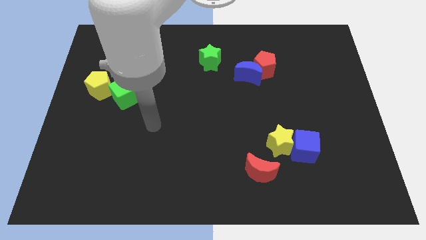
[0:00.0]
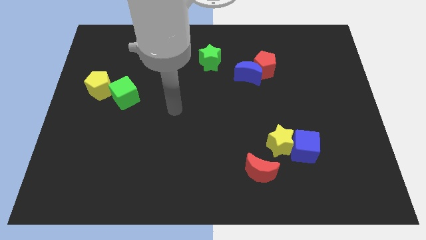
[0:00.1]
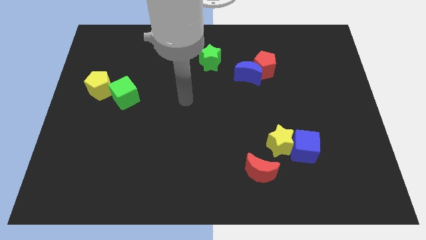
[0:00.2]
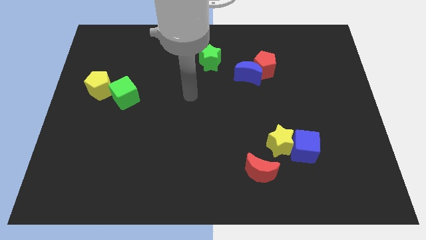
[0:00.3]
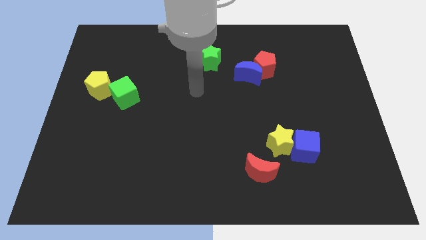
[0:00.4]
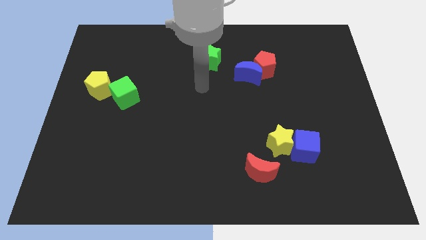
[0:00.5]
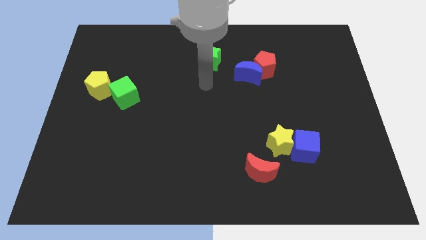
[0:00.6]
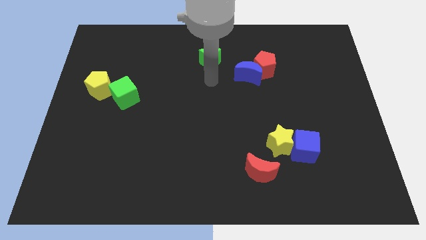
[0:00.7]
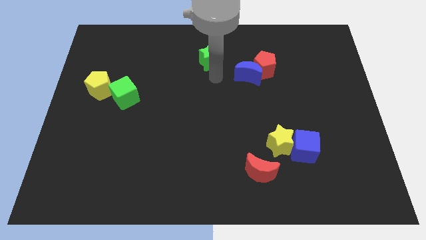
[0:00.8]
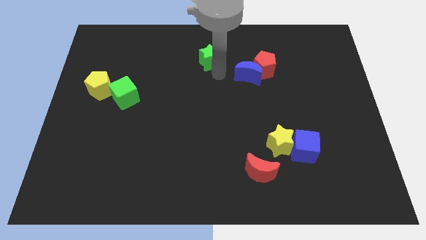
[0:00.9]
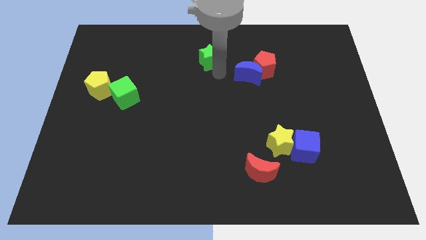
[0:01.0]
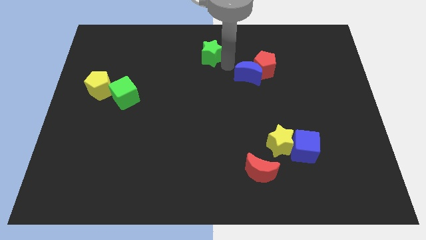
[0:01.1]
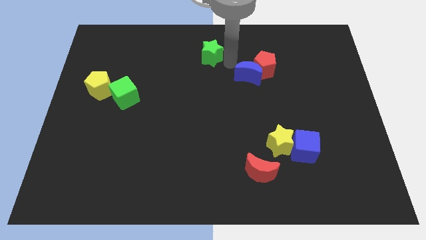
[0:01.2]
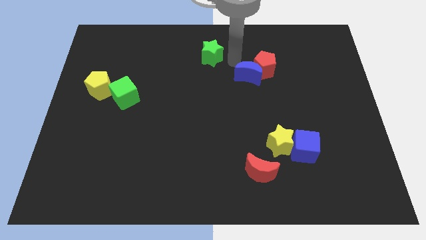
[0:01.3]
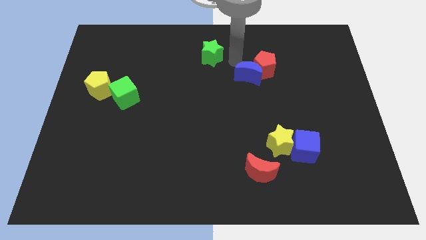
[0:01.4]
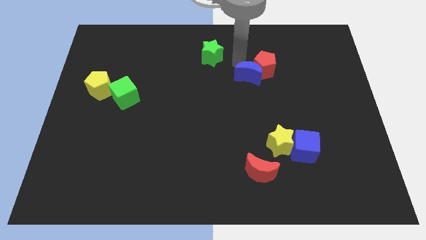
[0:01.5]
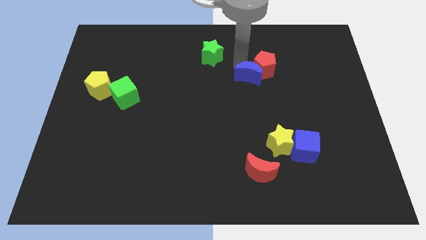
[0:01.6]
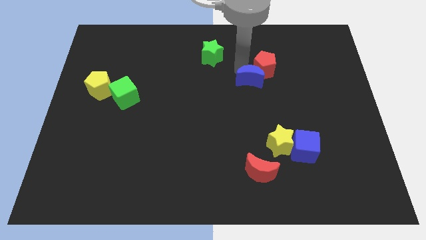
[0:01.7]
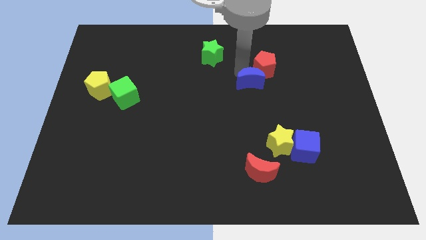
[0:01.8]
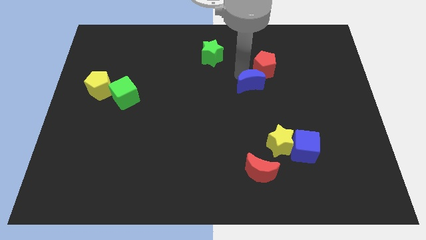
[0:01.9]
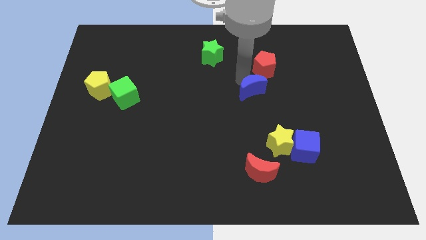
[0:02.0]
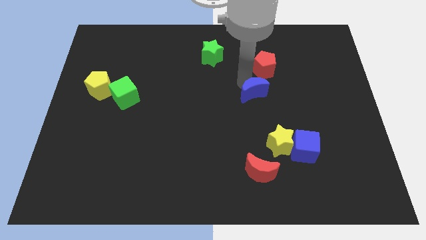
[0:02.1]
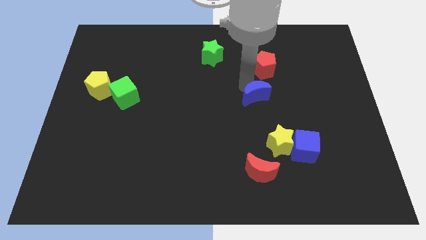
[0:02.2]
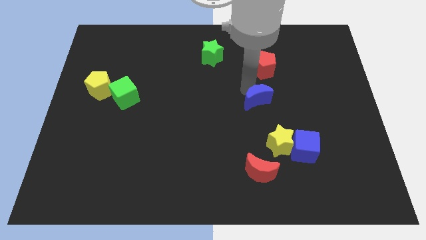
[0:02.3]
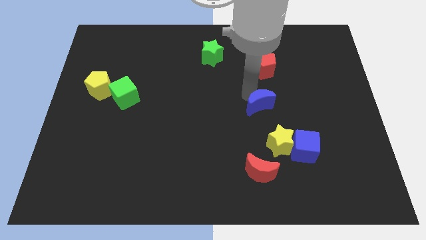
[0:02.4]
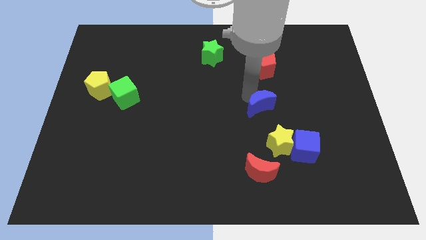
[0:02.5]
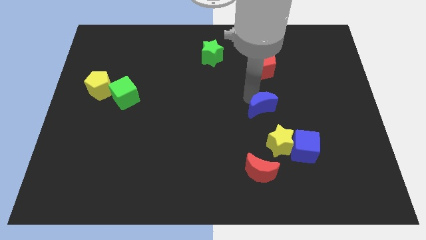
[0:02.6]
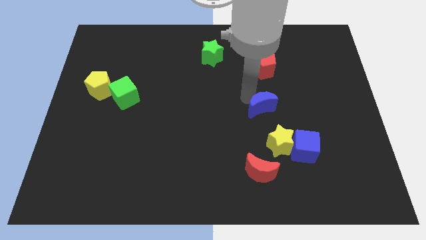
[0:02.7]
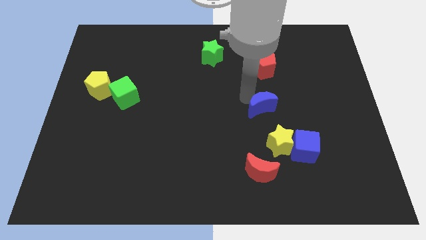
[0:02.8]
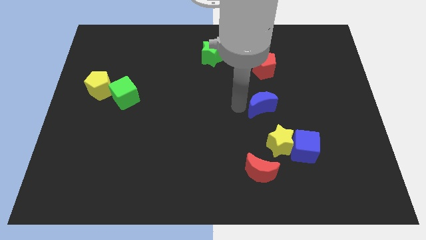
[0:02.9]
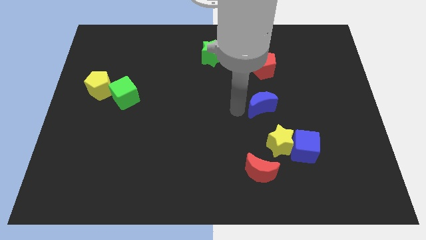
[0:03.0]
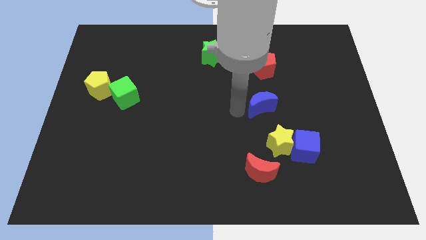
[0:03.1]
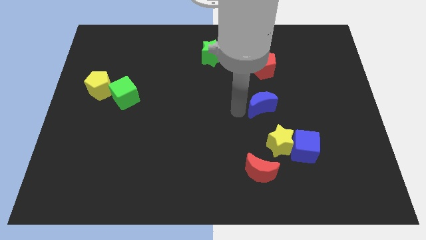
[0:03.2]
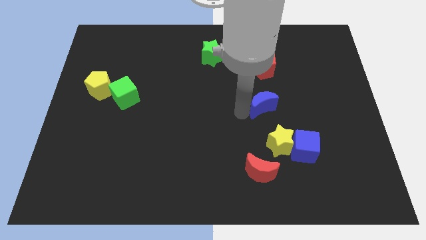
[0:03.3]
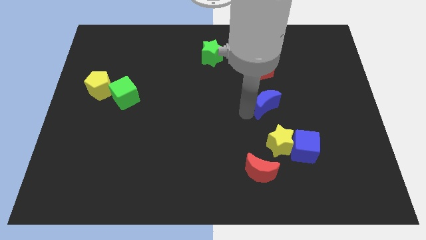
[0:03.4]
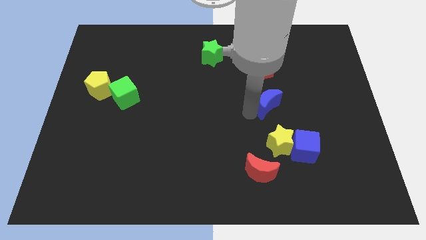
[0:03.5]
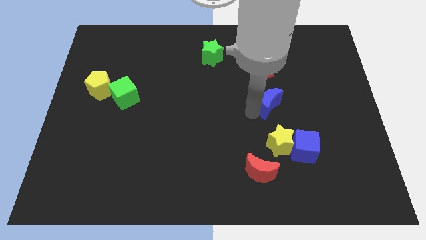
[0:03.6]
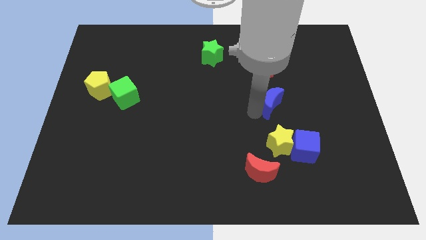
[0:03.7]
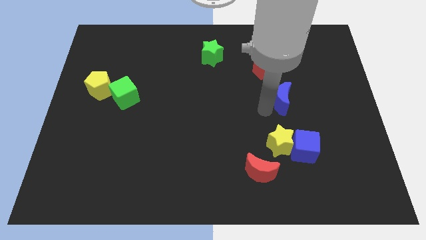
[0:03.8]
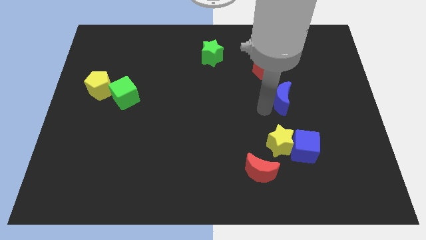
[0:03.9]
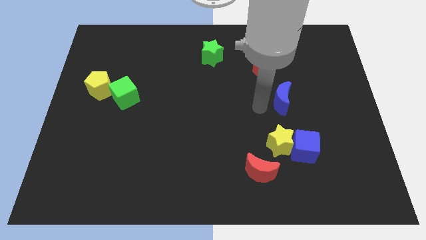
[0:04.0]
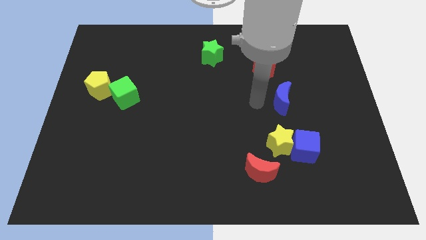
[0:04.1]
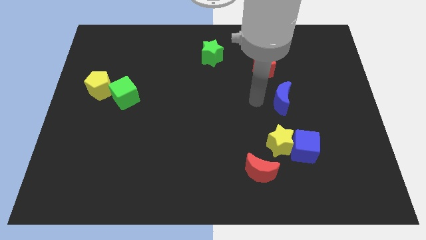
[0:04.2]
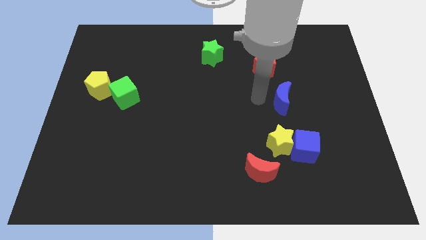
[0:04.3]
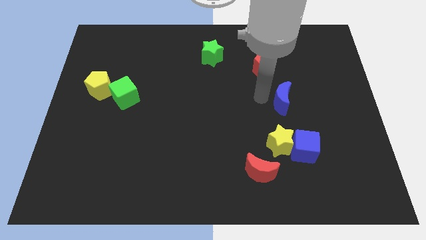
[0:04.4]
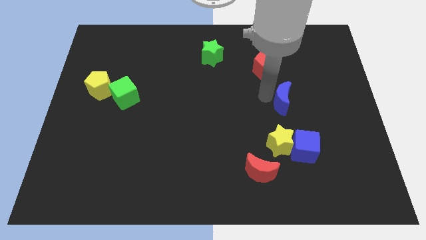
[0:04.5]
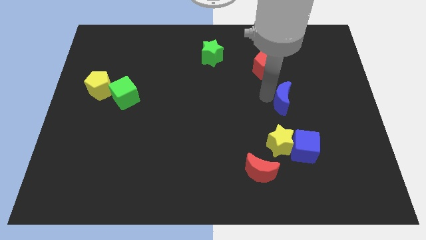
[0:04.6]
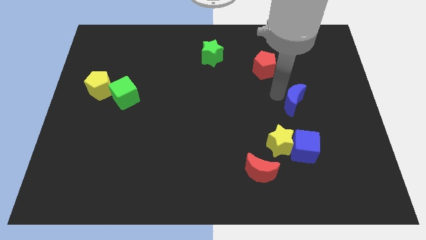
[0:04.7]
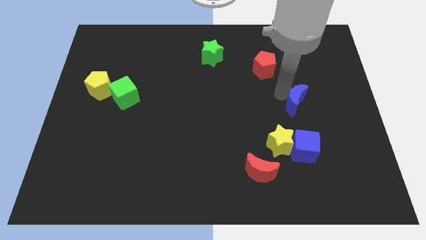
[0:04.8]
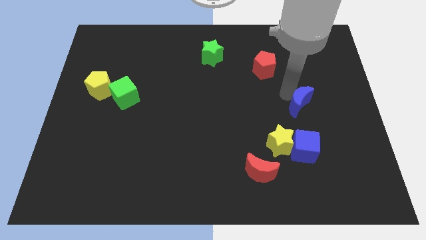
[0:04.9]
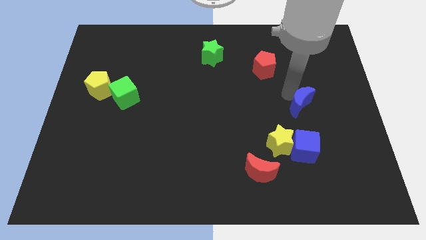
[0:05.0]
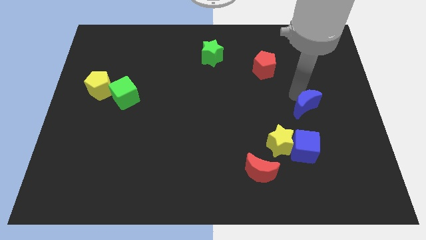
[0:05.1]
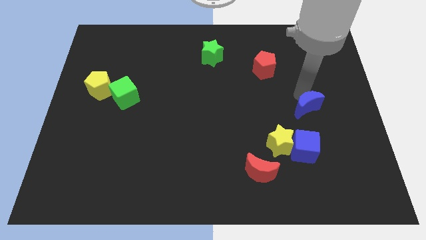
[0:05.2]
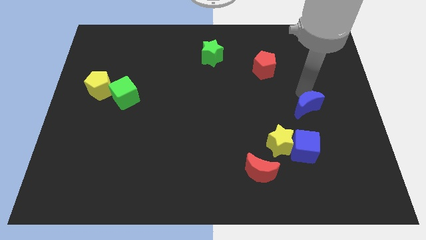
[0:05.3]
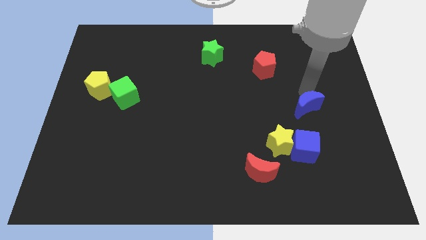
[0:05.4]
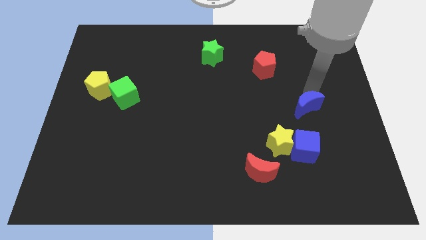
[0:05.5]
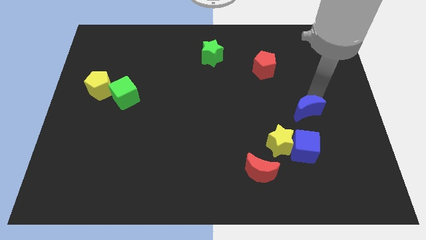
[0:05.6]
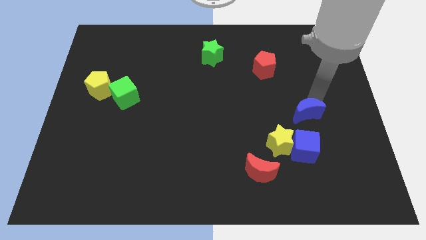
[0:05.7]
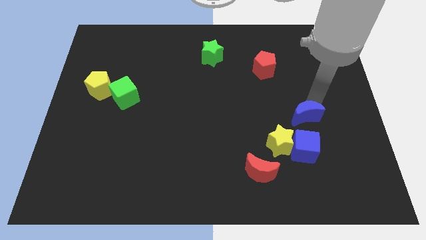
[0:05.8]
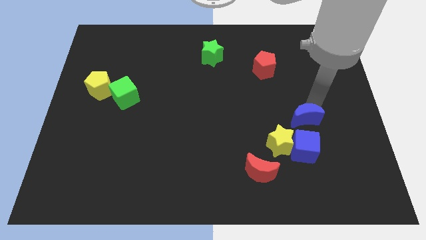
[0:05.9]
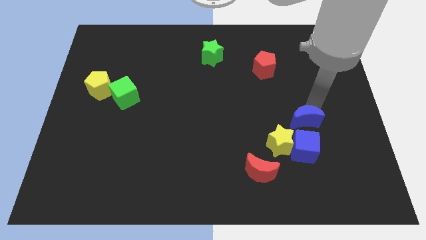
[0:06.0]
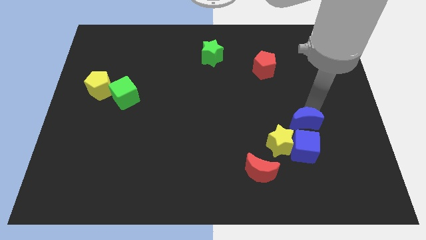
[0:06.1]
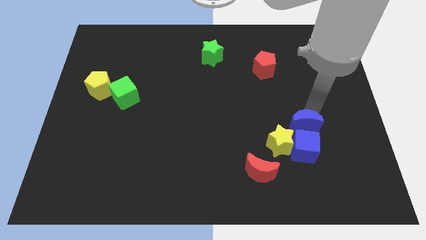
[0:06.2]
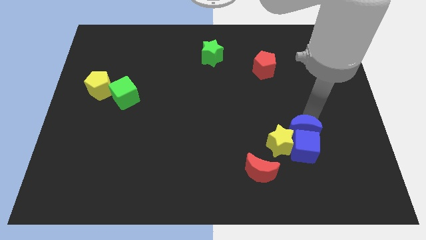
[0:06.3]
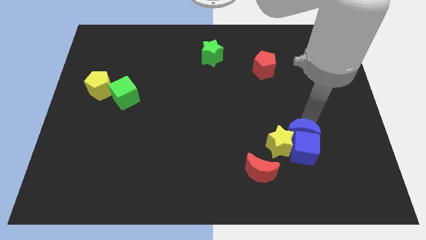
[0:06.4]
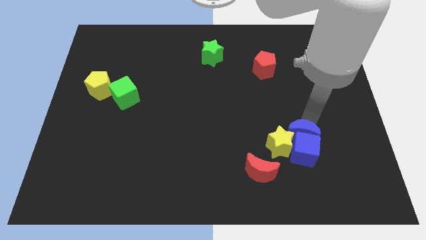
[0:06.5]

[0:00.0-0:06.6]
slide the blue moon next to the blue cube

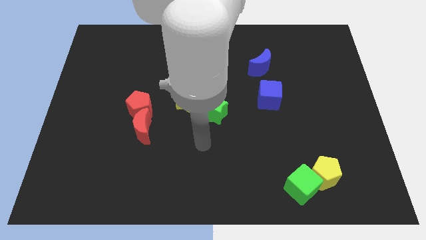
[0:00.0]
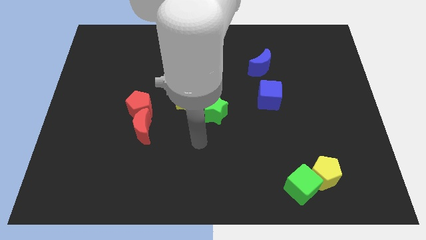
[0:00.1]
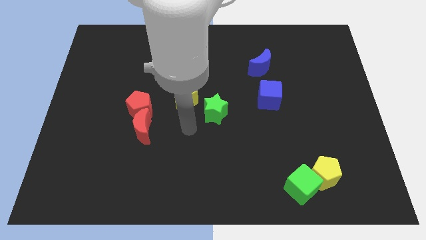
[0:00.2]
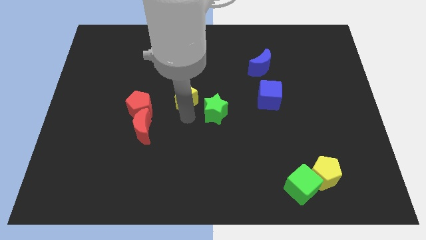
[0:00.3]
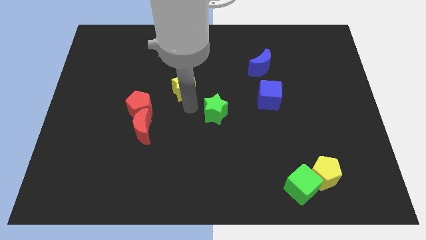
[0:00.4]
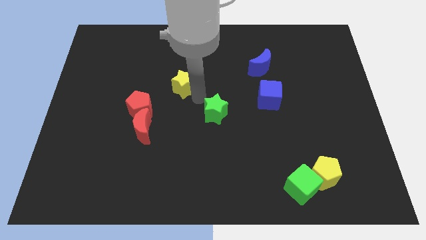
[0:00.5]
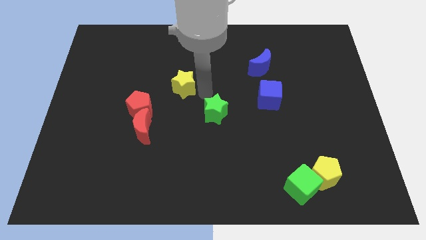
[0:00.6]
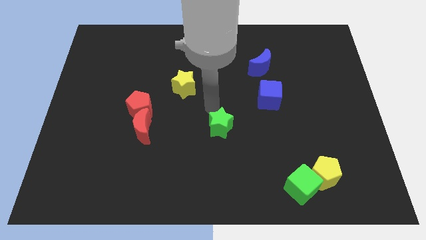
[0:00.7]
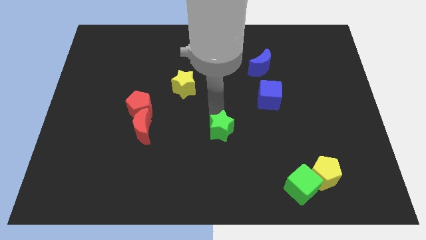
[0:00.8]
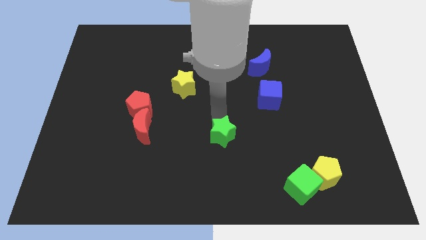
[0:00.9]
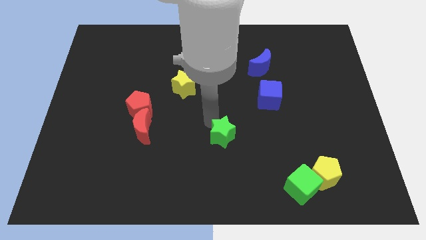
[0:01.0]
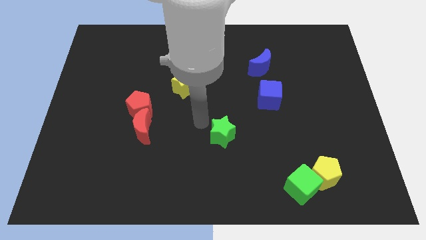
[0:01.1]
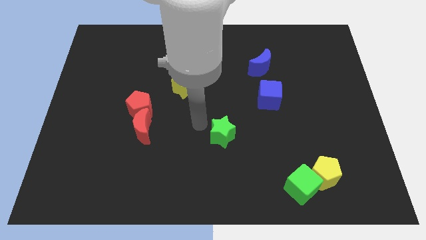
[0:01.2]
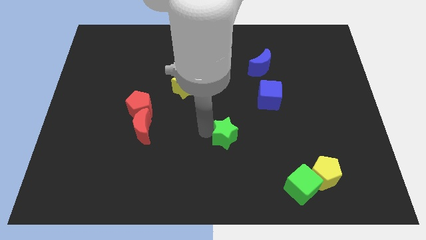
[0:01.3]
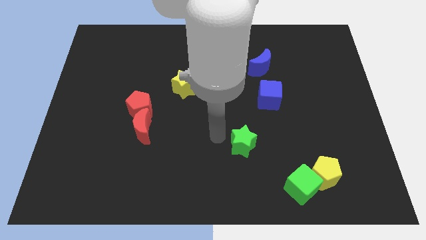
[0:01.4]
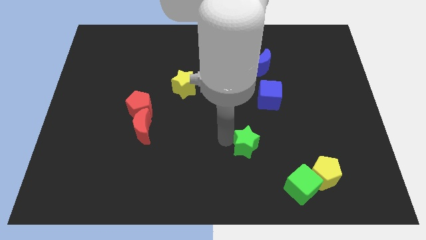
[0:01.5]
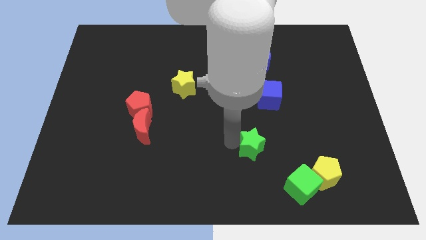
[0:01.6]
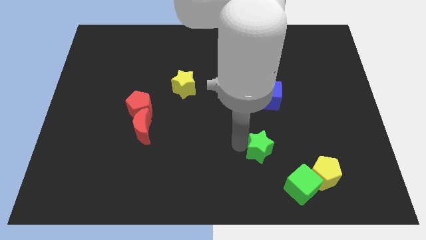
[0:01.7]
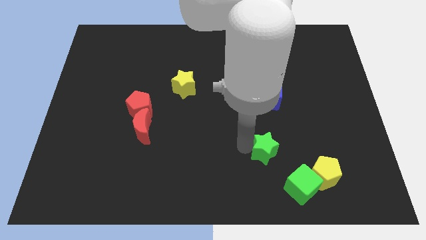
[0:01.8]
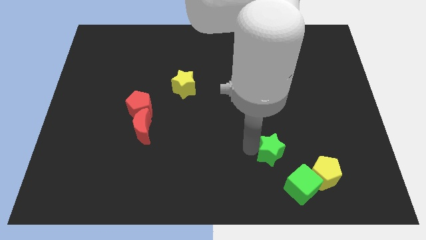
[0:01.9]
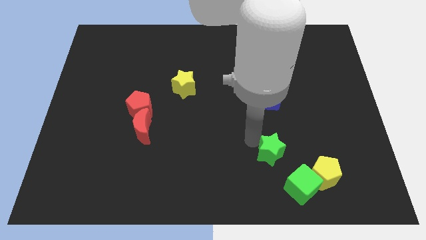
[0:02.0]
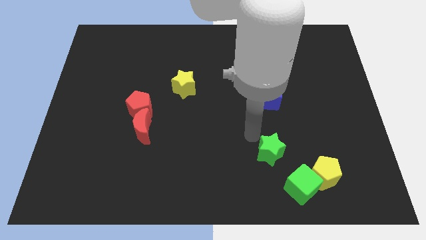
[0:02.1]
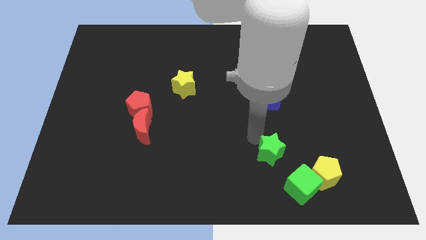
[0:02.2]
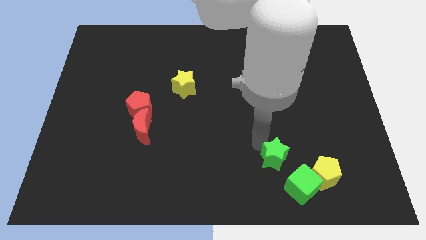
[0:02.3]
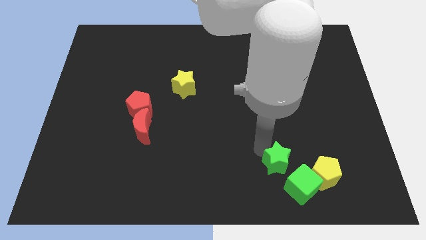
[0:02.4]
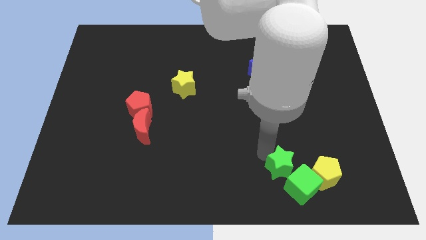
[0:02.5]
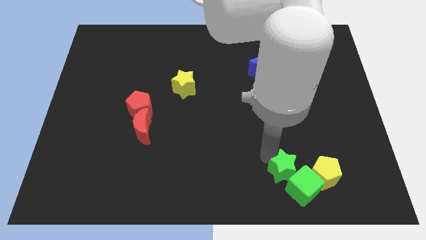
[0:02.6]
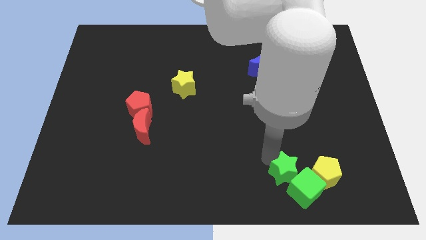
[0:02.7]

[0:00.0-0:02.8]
push the green star towards the green cube
